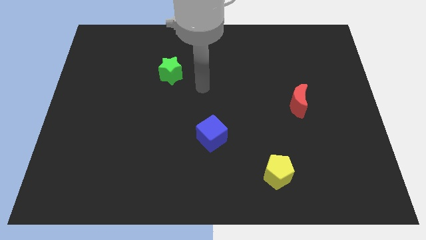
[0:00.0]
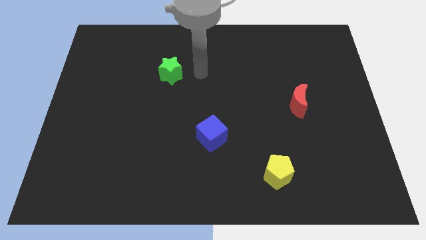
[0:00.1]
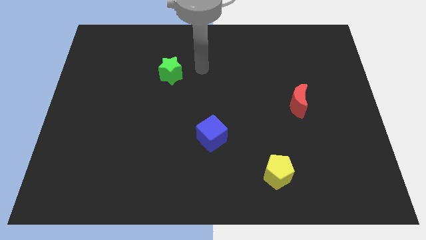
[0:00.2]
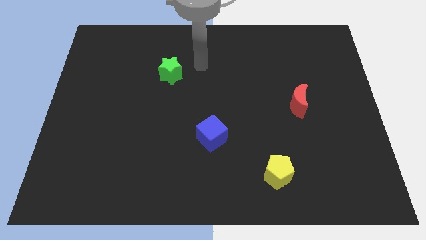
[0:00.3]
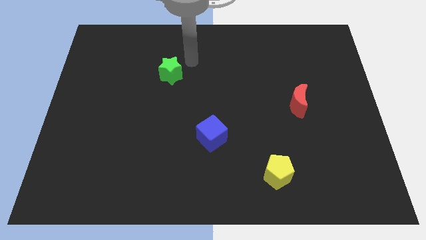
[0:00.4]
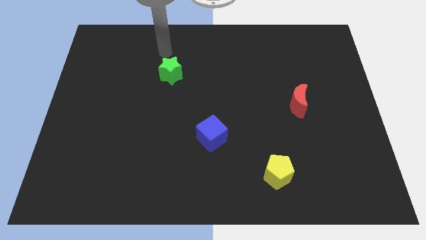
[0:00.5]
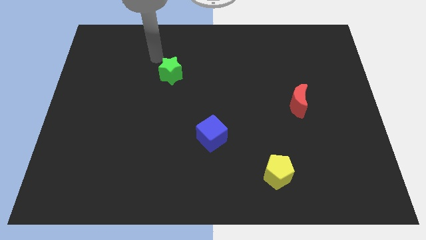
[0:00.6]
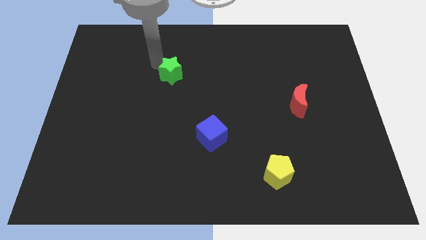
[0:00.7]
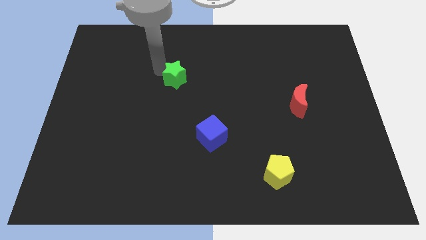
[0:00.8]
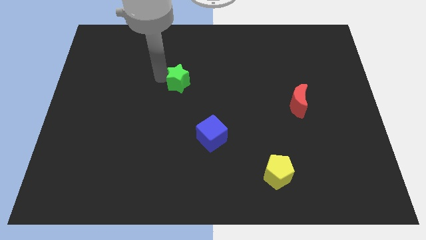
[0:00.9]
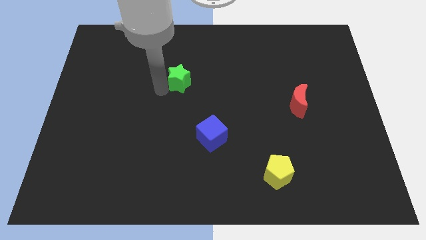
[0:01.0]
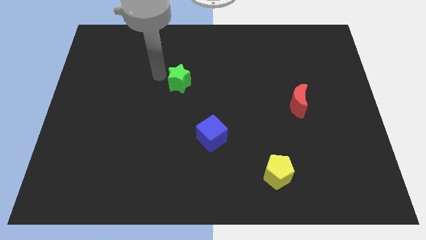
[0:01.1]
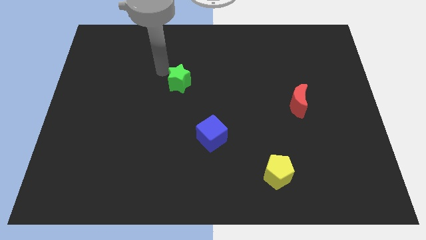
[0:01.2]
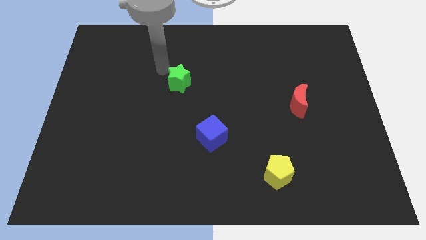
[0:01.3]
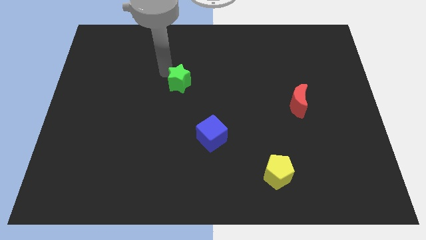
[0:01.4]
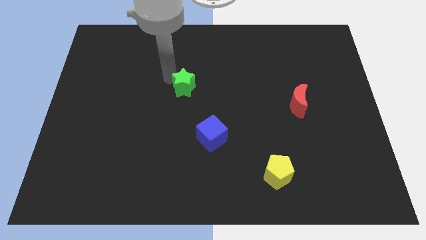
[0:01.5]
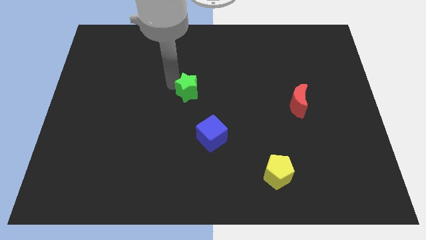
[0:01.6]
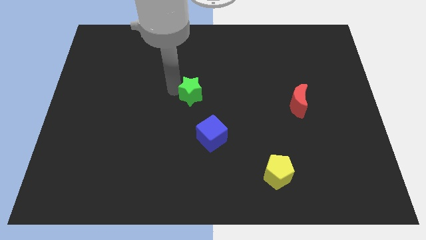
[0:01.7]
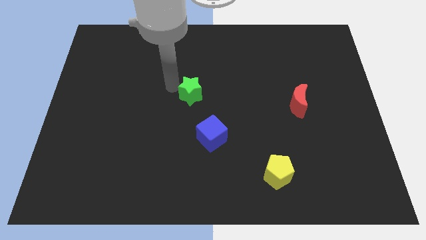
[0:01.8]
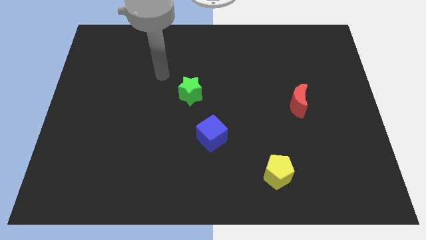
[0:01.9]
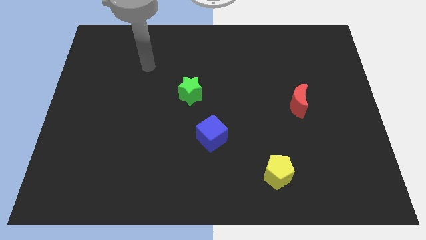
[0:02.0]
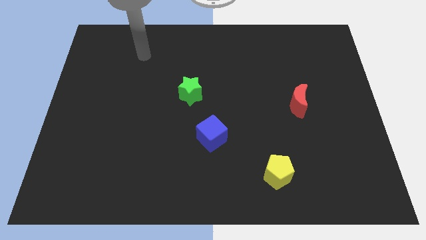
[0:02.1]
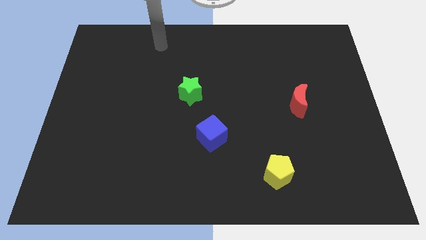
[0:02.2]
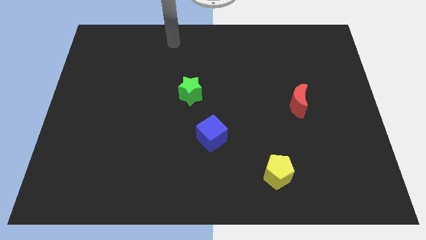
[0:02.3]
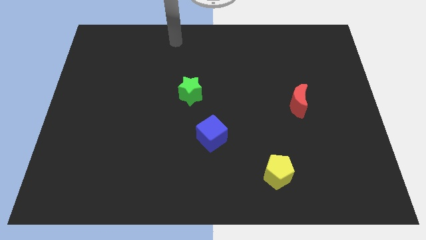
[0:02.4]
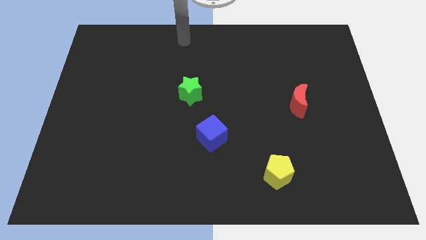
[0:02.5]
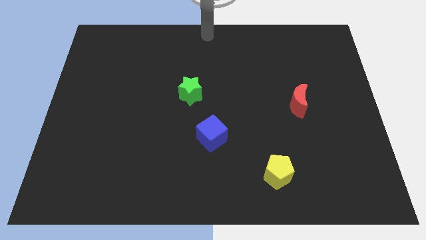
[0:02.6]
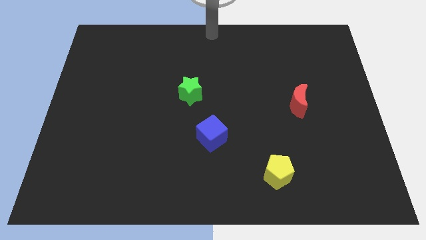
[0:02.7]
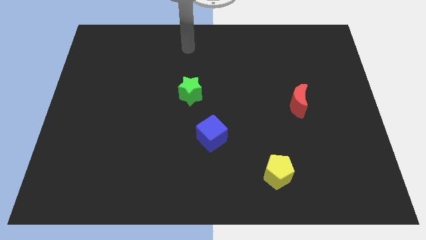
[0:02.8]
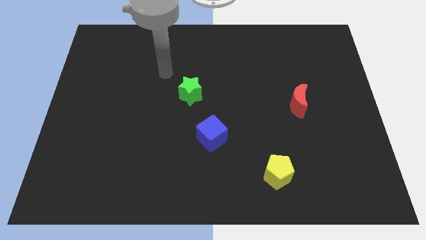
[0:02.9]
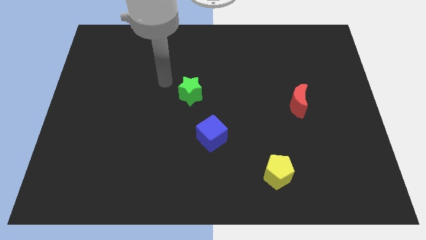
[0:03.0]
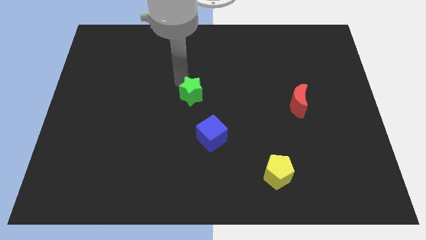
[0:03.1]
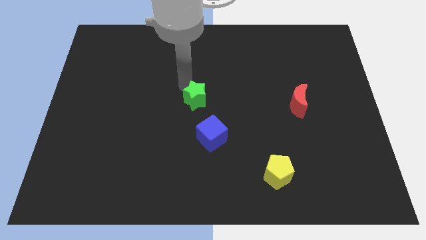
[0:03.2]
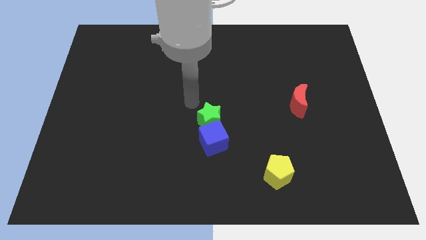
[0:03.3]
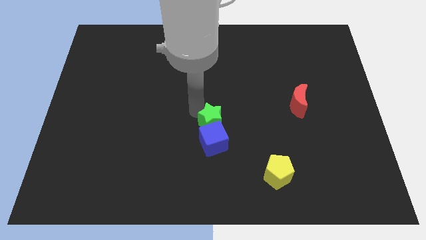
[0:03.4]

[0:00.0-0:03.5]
put the star next to the blue block

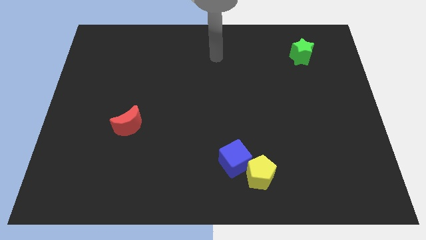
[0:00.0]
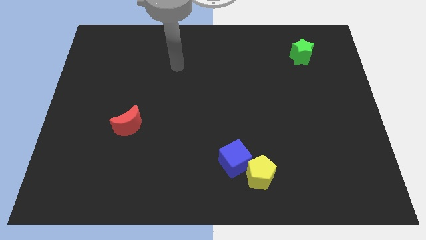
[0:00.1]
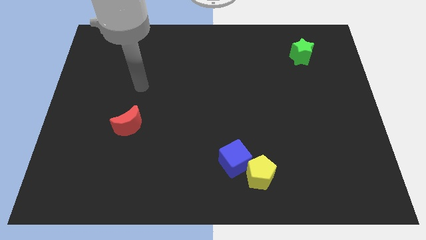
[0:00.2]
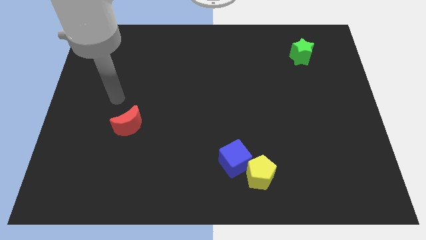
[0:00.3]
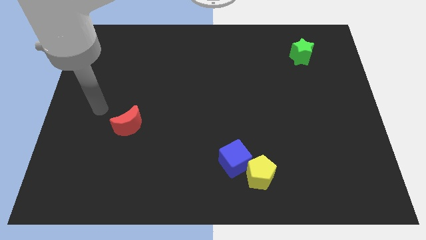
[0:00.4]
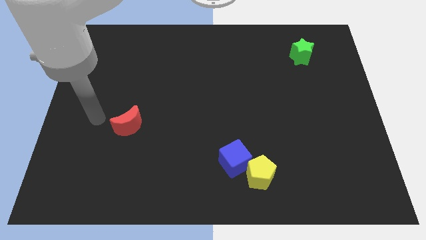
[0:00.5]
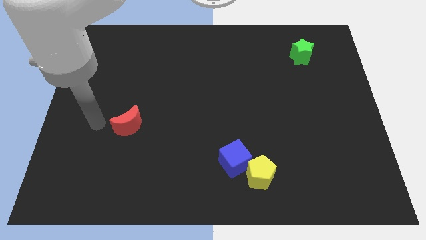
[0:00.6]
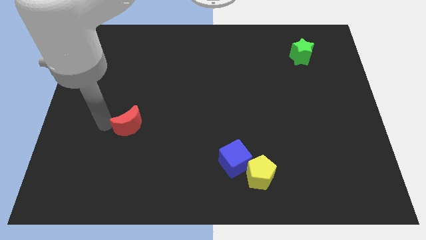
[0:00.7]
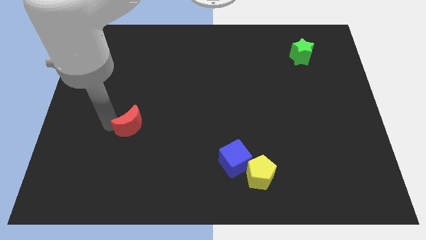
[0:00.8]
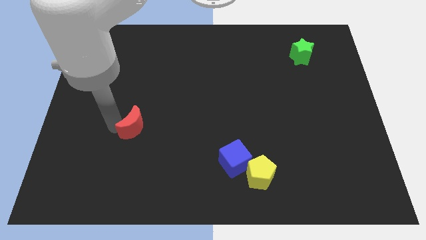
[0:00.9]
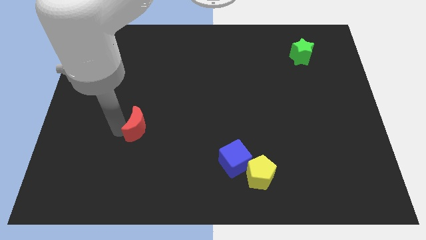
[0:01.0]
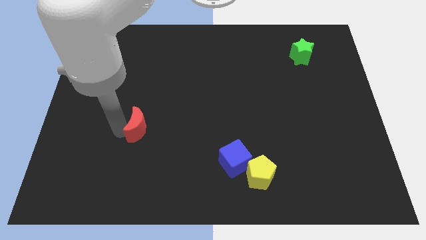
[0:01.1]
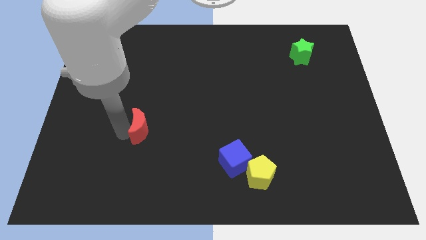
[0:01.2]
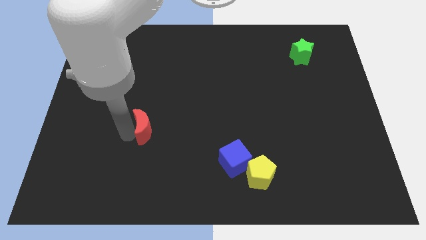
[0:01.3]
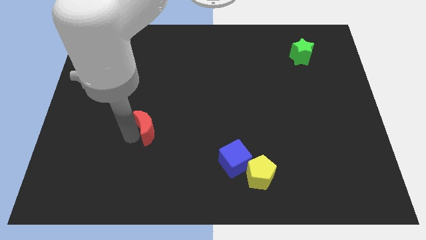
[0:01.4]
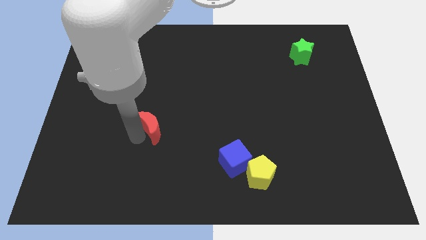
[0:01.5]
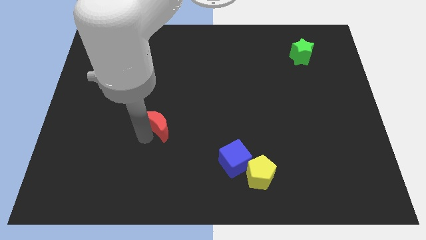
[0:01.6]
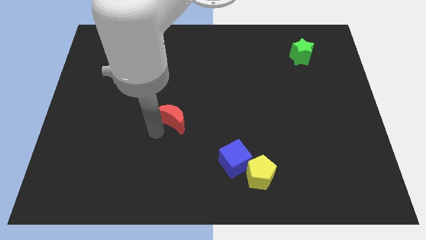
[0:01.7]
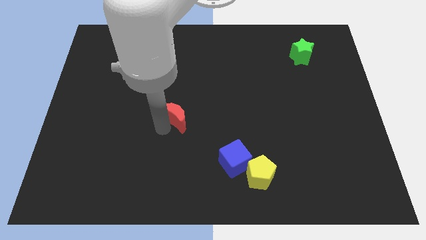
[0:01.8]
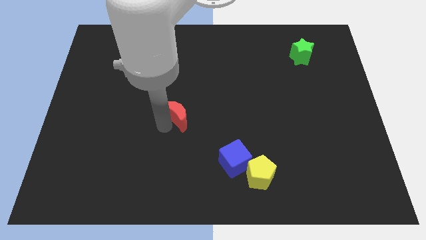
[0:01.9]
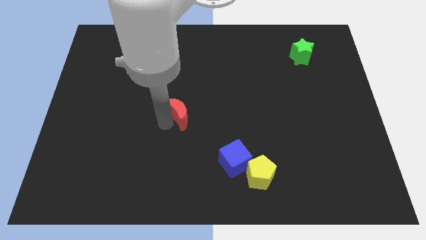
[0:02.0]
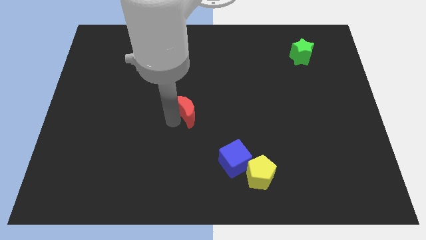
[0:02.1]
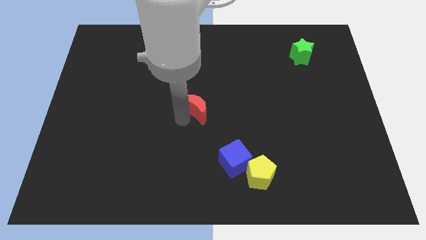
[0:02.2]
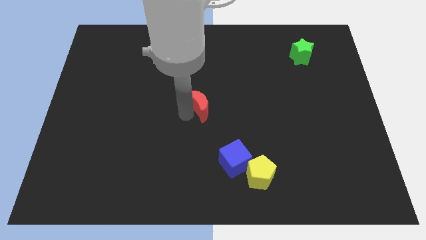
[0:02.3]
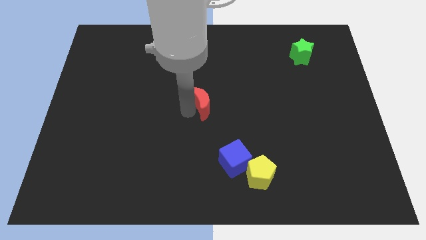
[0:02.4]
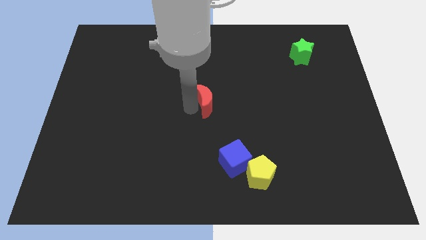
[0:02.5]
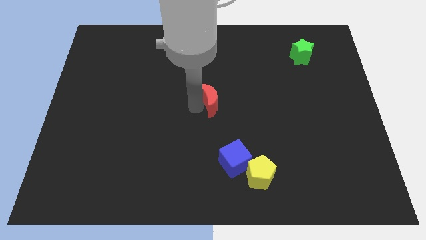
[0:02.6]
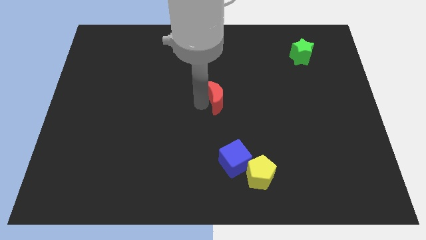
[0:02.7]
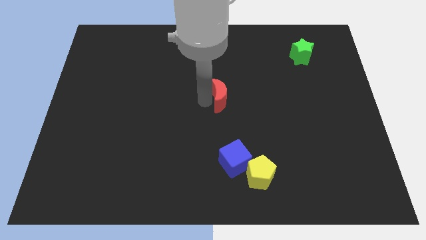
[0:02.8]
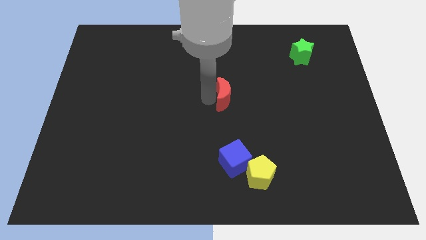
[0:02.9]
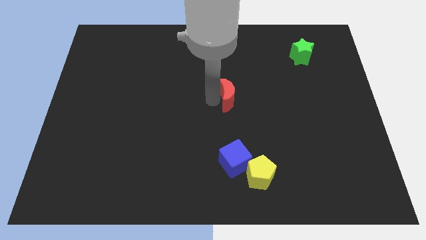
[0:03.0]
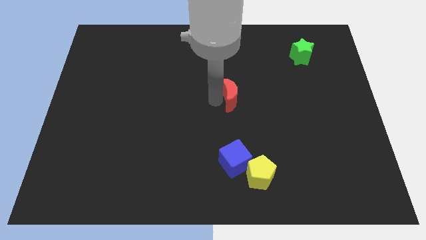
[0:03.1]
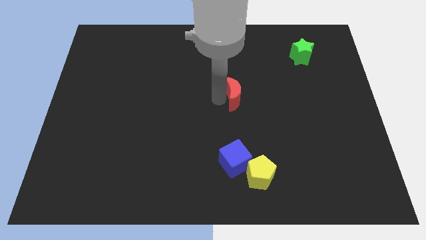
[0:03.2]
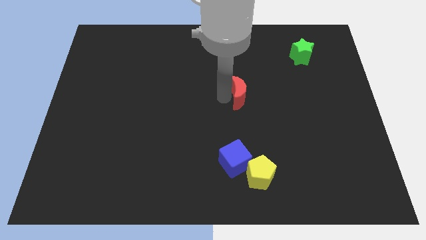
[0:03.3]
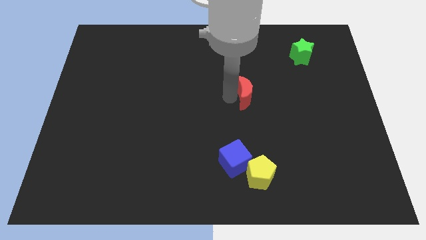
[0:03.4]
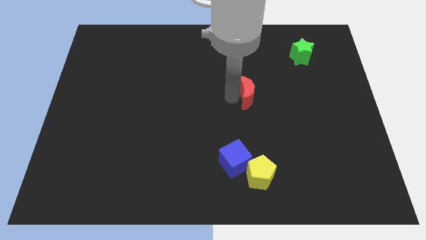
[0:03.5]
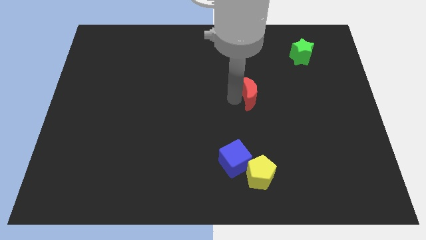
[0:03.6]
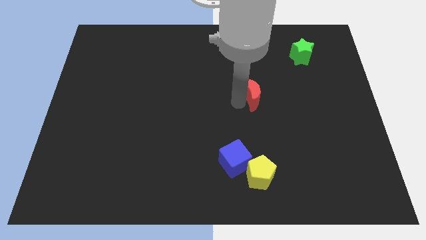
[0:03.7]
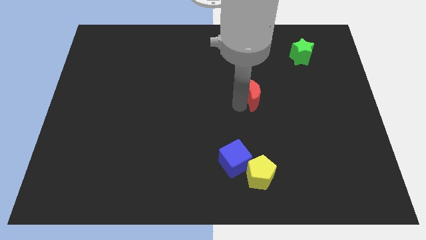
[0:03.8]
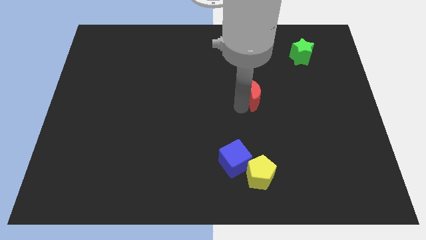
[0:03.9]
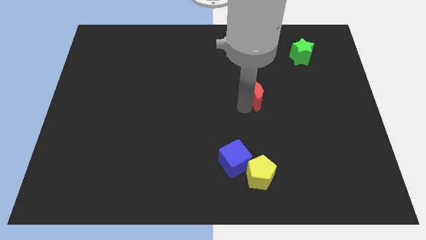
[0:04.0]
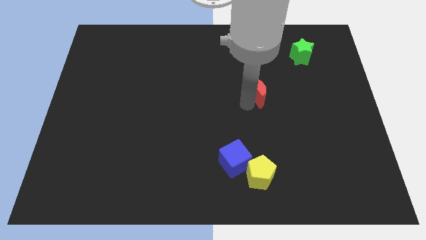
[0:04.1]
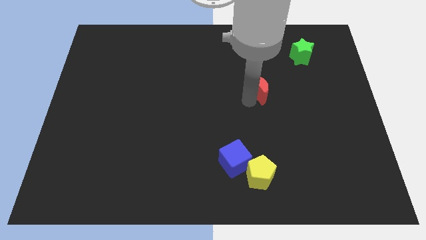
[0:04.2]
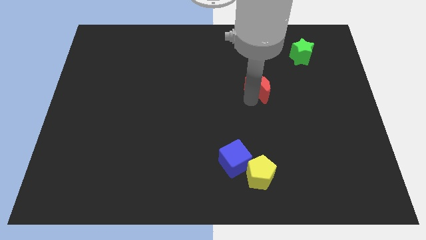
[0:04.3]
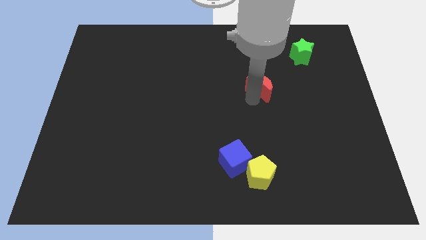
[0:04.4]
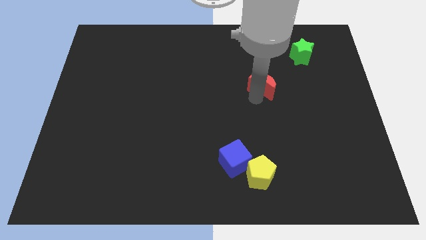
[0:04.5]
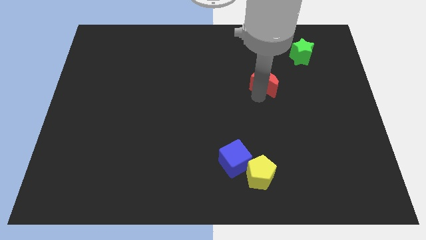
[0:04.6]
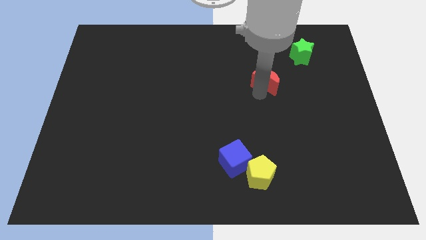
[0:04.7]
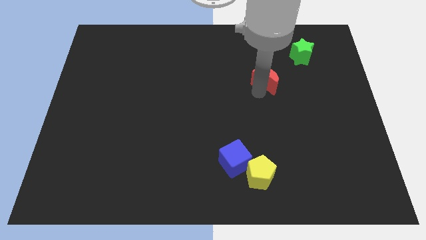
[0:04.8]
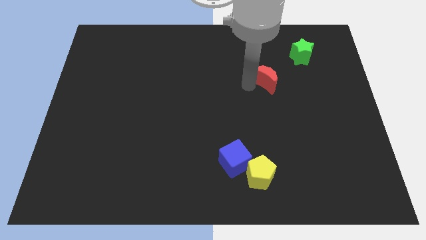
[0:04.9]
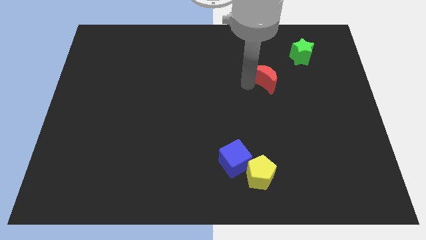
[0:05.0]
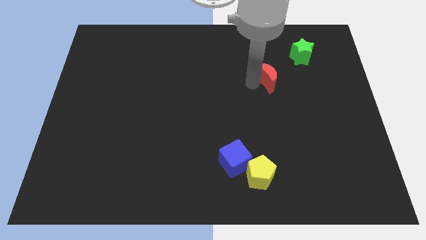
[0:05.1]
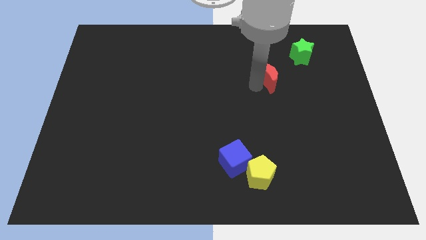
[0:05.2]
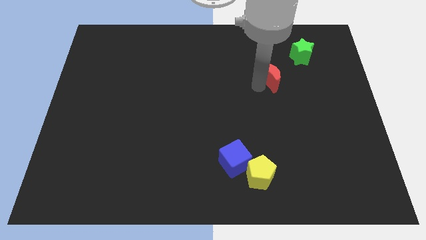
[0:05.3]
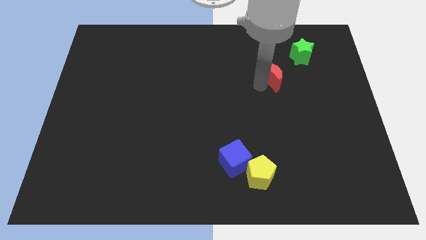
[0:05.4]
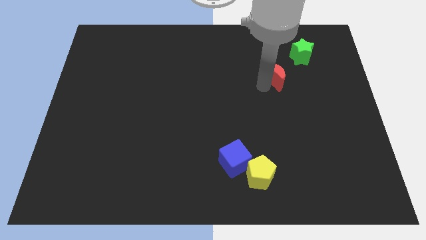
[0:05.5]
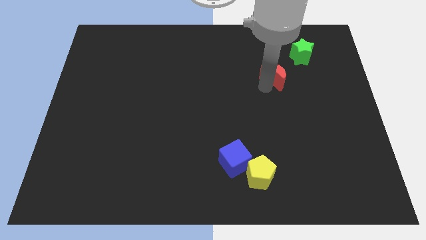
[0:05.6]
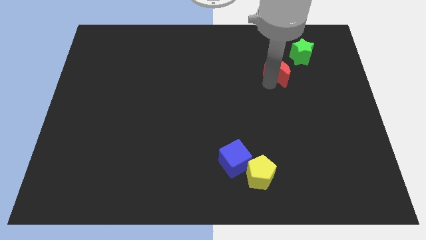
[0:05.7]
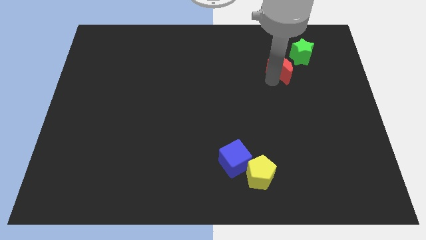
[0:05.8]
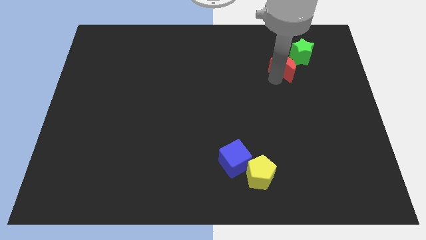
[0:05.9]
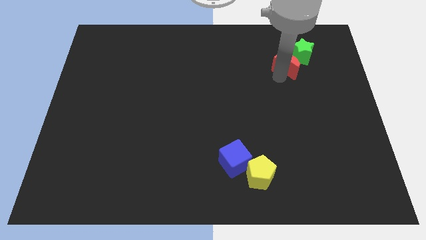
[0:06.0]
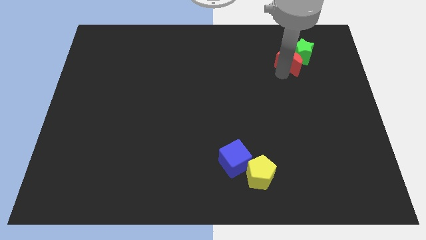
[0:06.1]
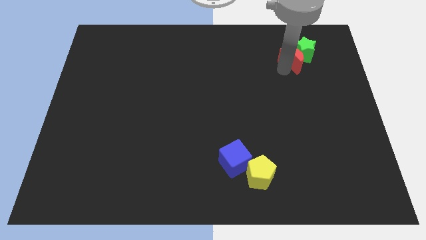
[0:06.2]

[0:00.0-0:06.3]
slide the red moon towards the green block
